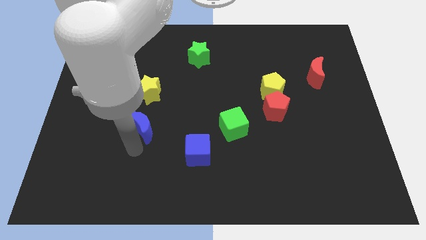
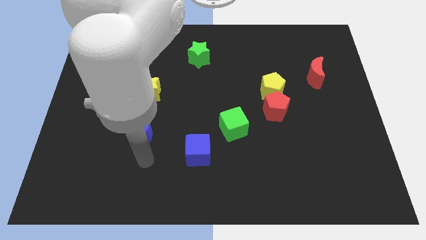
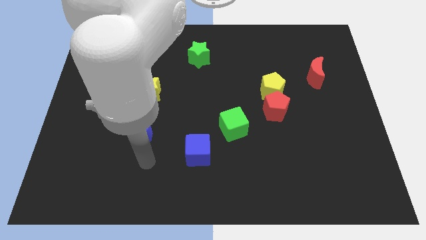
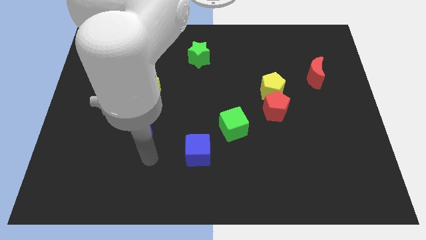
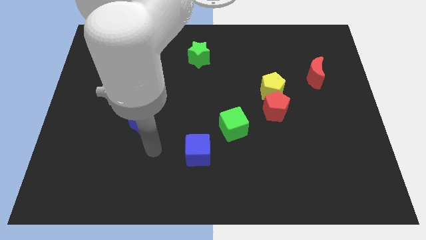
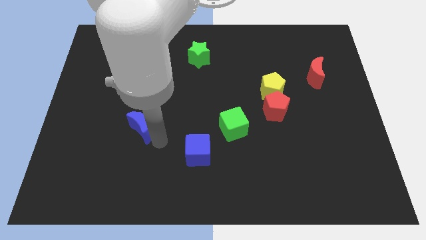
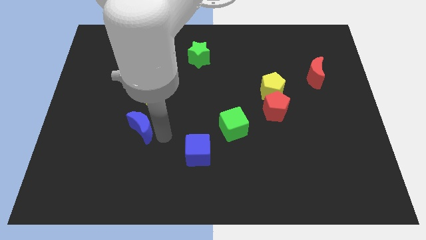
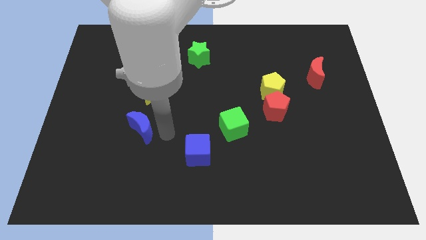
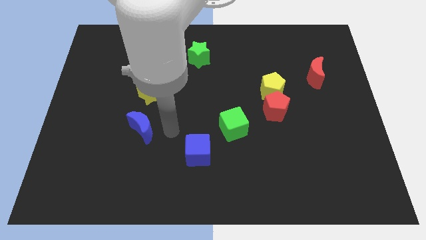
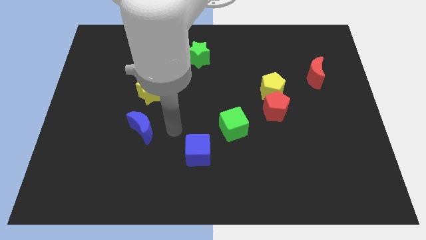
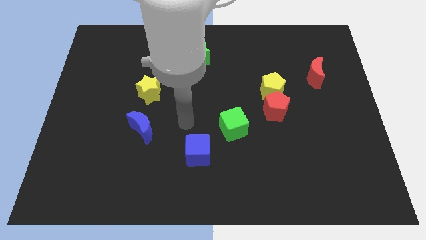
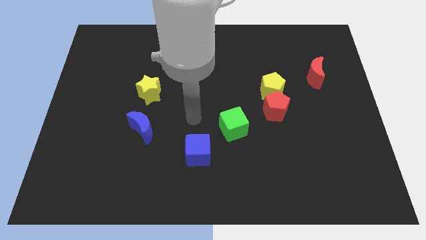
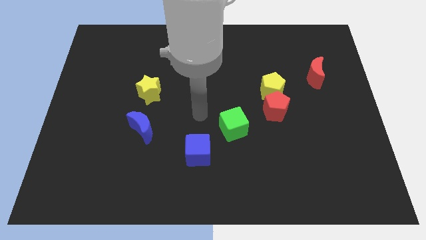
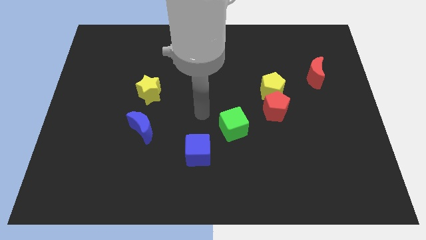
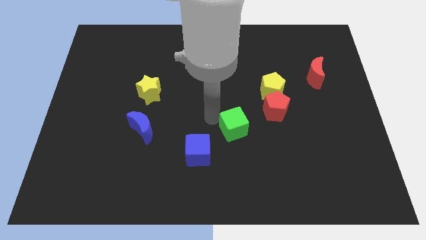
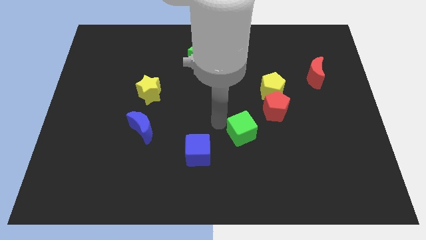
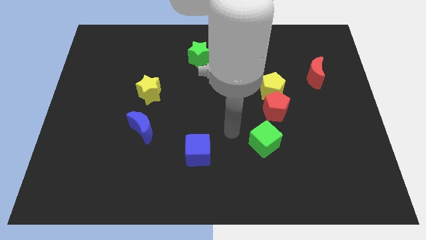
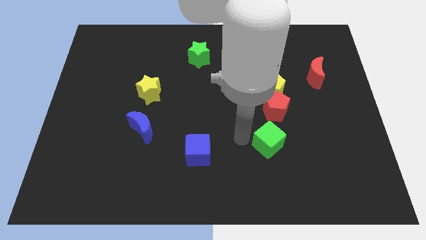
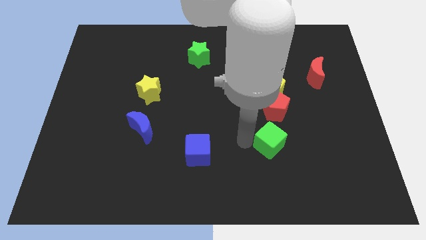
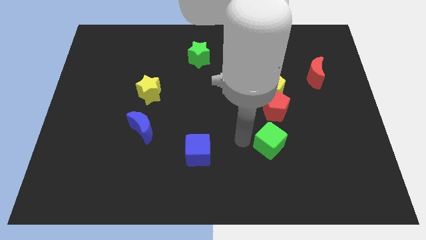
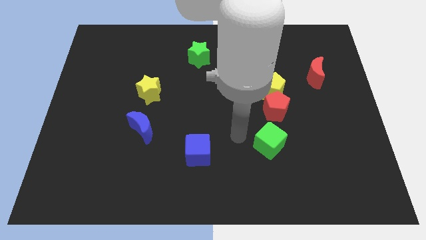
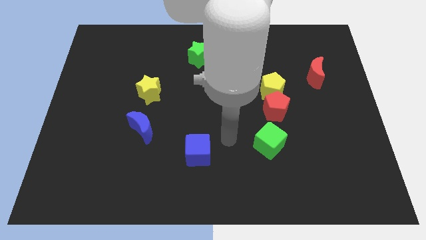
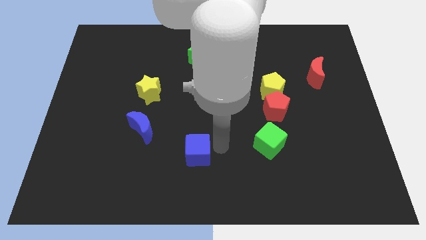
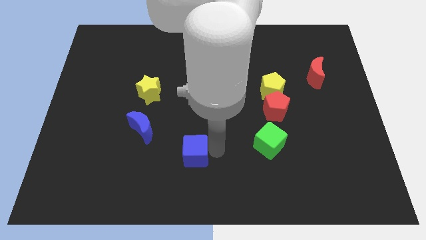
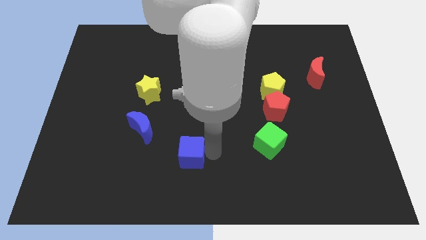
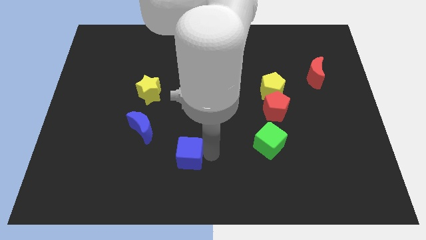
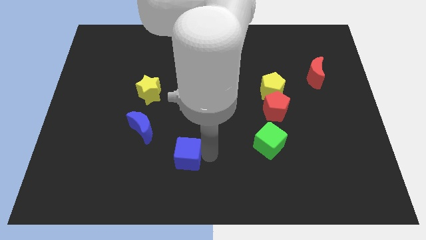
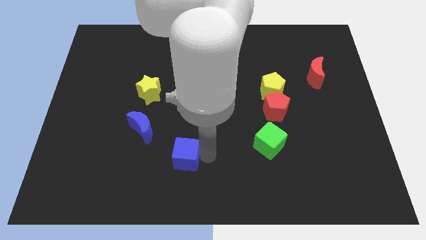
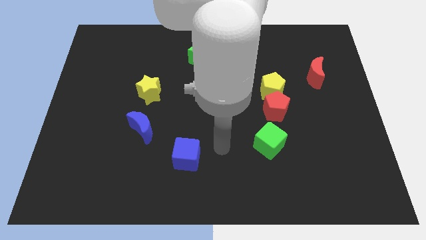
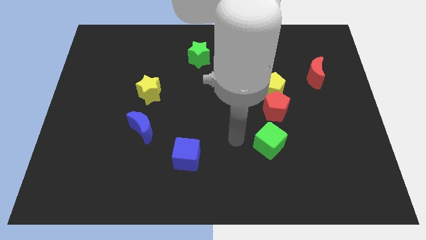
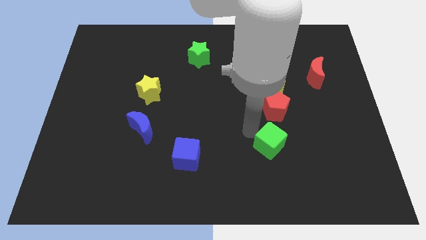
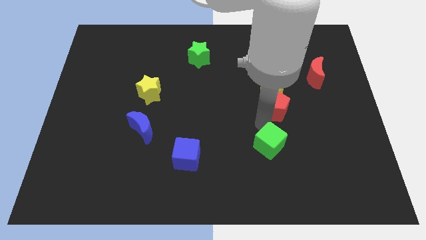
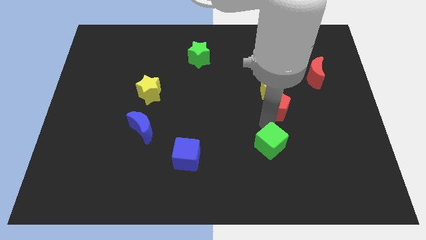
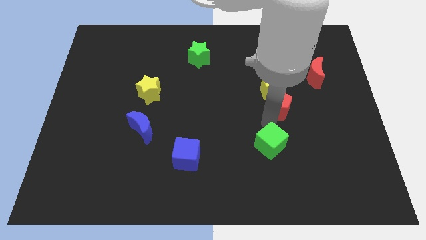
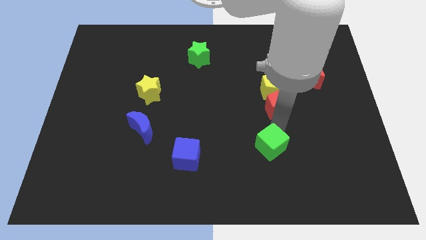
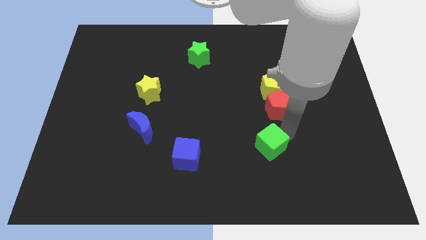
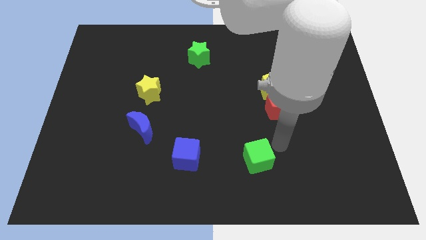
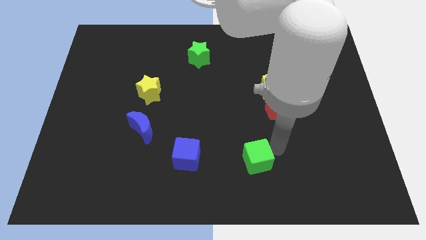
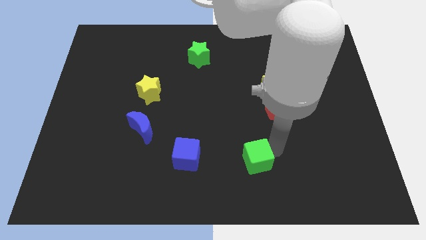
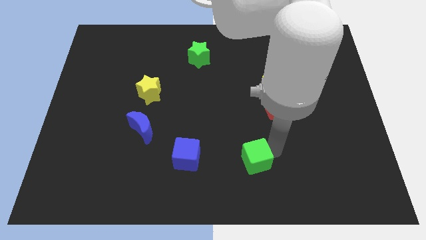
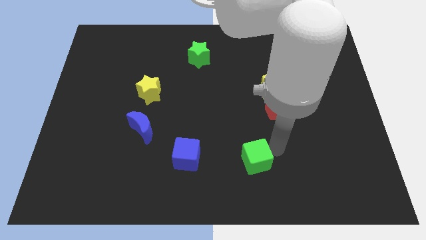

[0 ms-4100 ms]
place the blue cube and green cube in a line horizontally

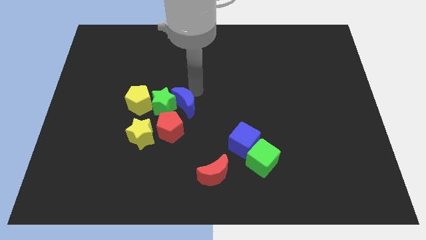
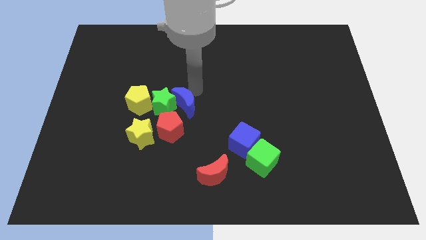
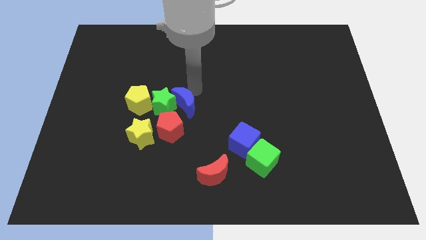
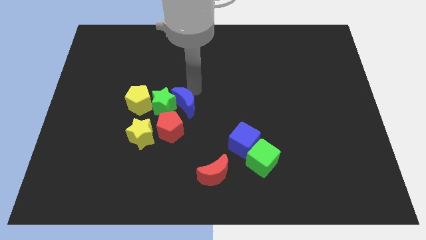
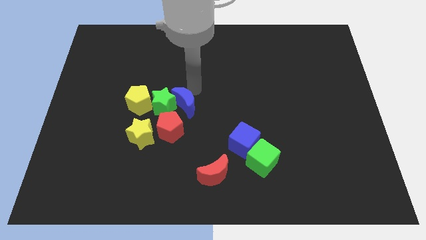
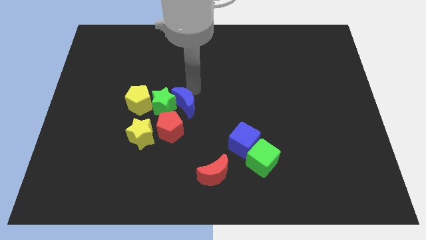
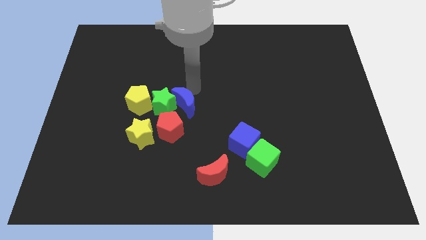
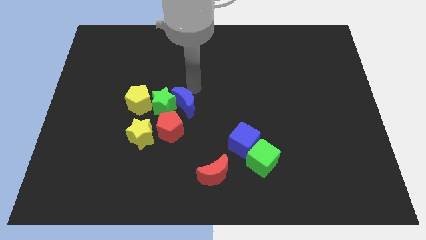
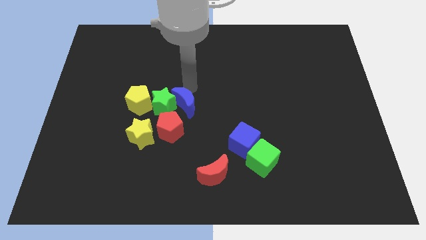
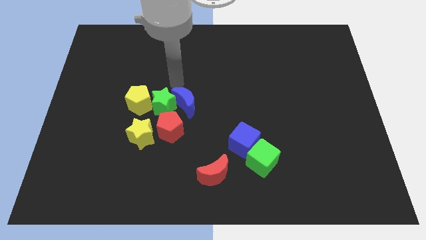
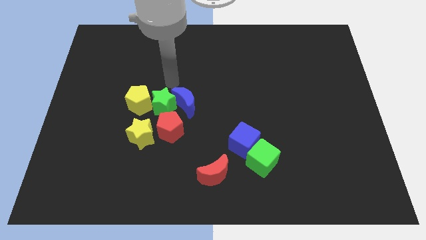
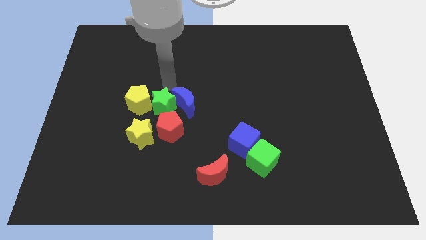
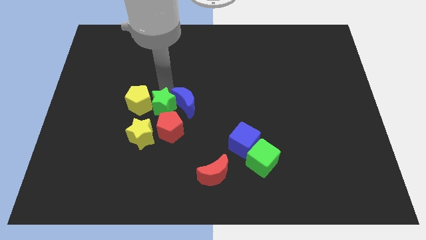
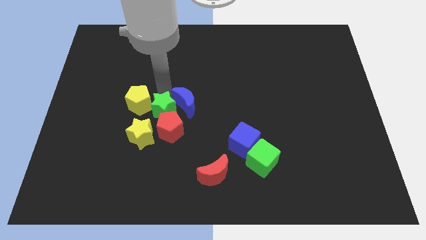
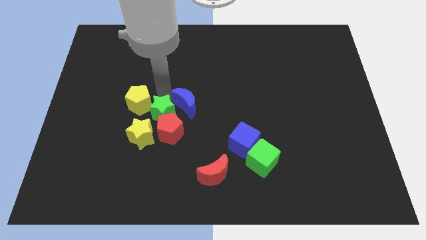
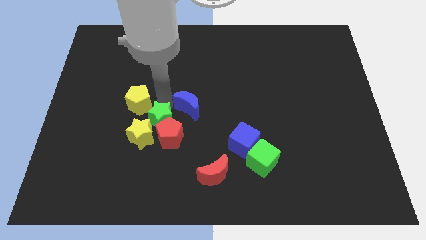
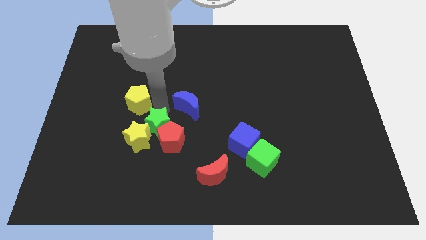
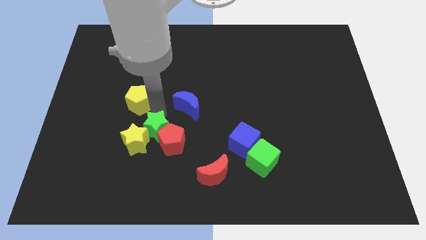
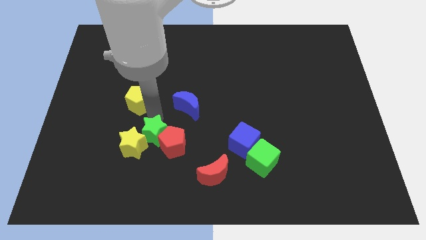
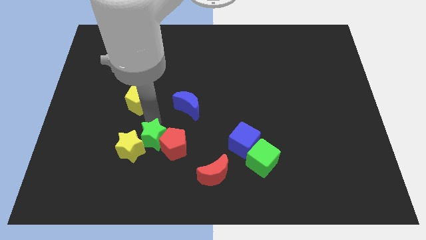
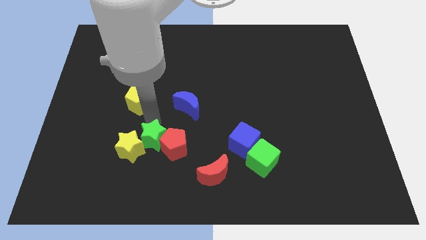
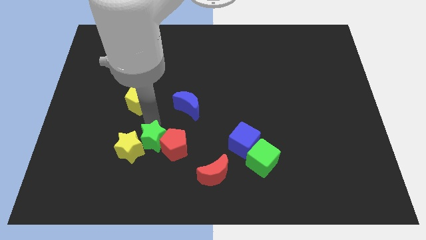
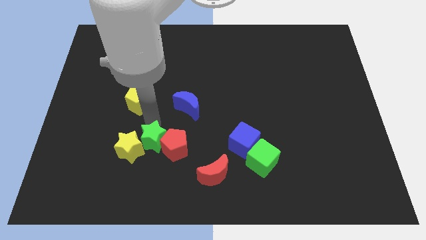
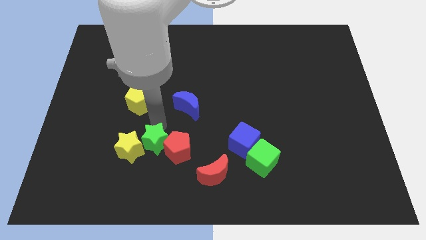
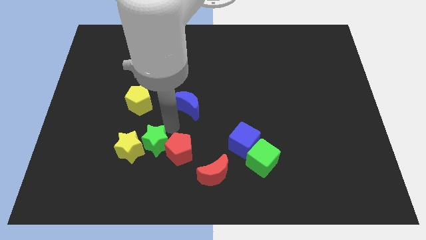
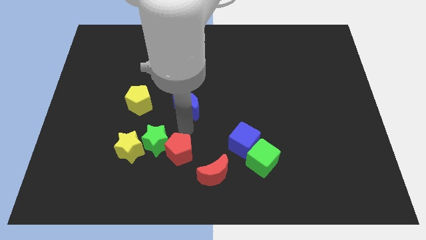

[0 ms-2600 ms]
separate the green star between red pentagon and yellow star

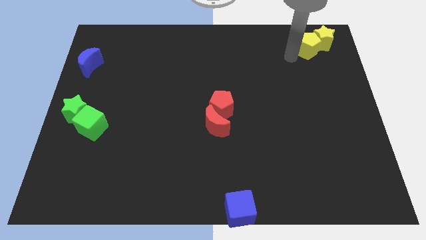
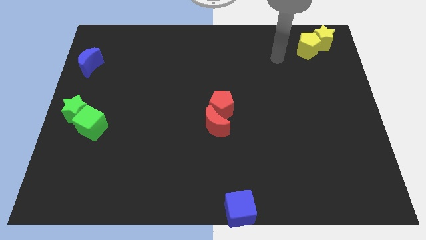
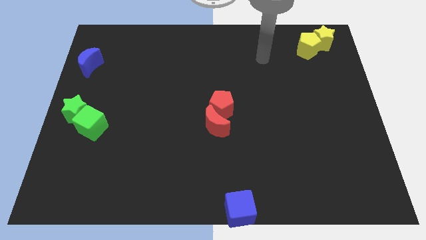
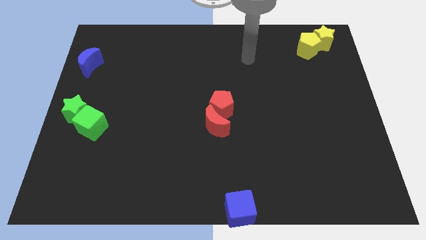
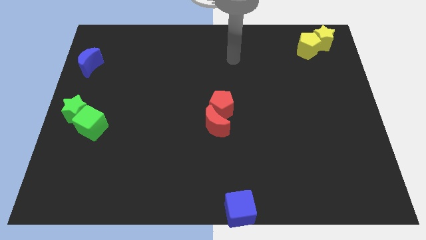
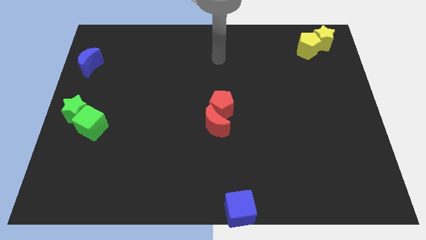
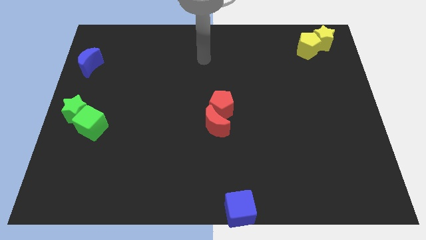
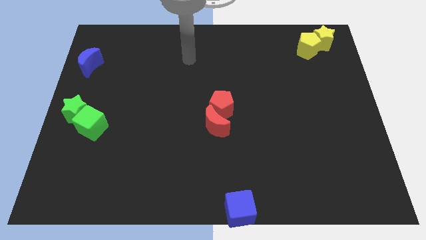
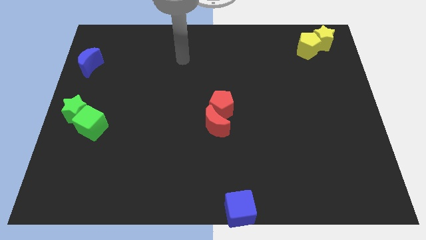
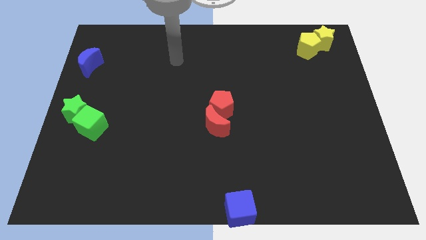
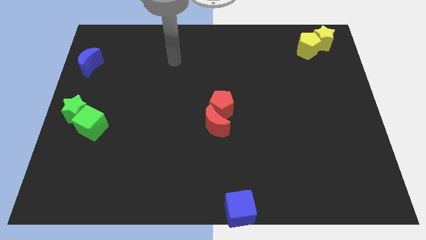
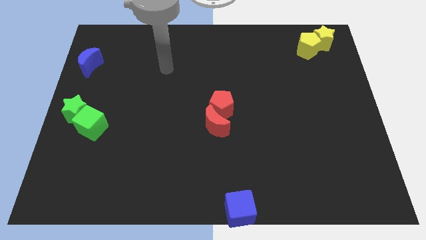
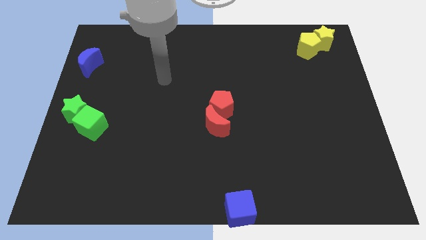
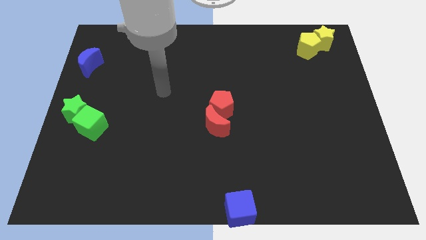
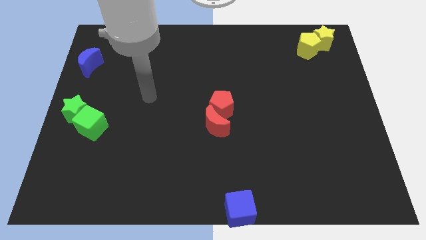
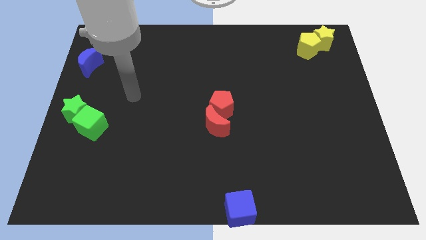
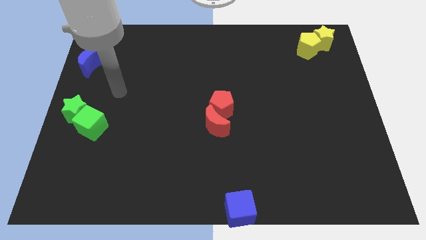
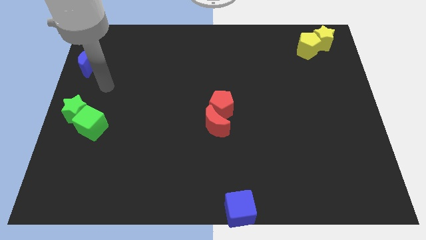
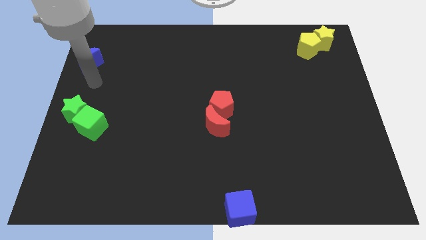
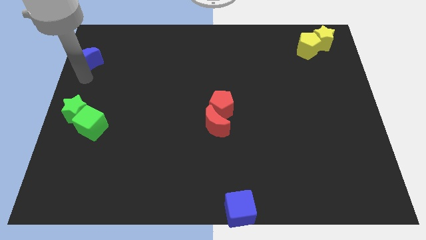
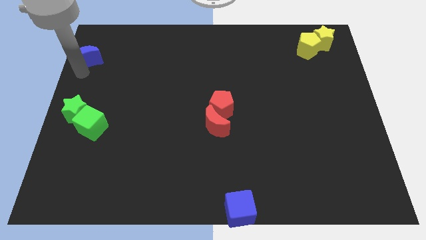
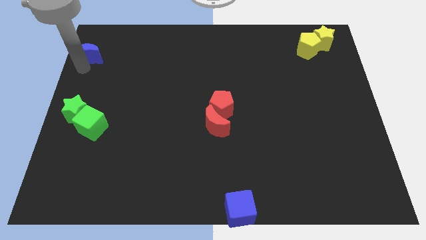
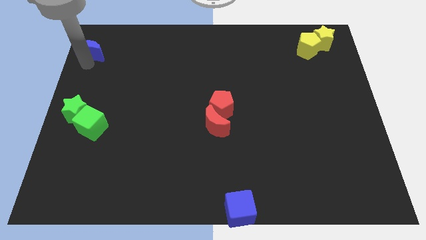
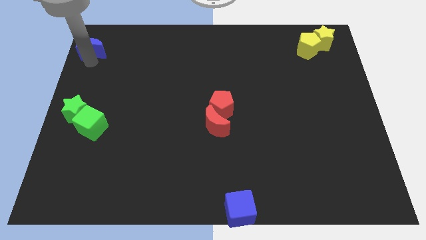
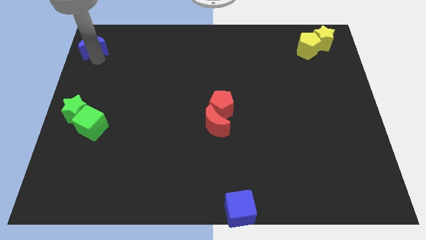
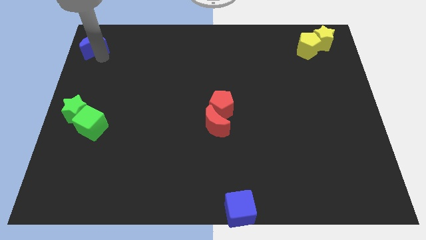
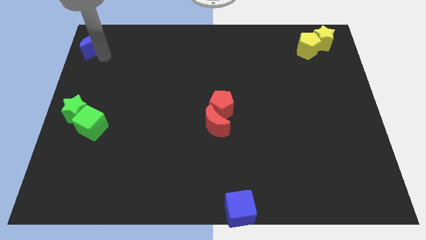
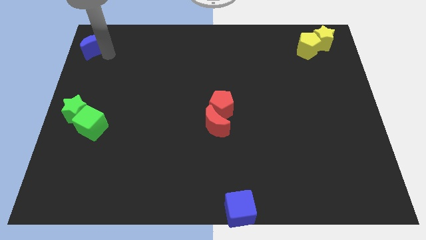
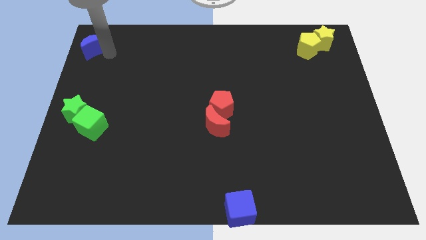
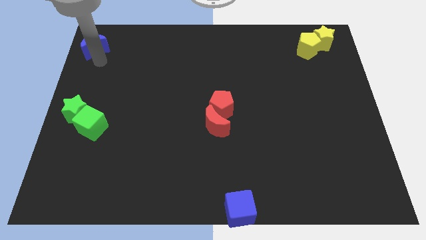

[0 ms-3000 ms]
touch blue moon with your arm
